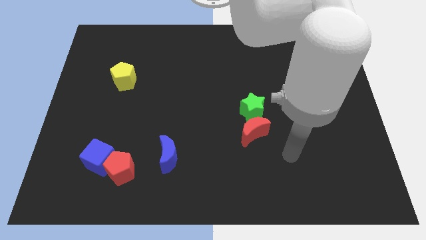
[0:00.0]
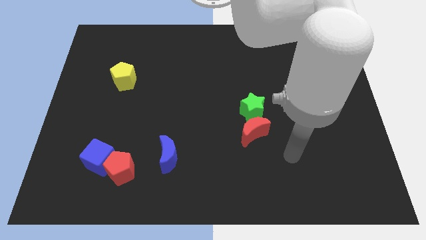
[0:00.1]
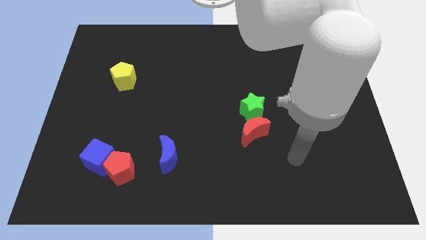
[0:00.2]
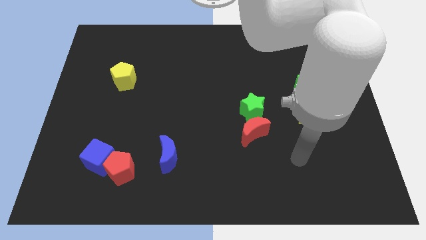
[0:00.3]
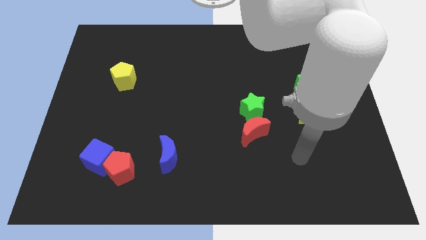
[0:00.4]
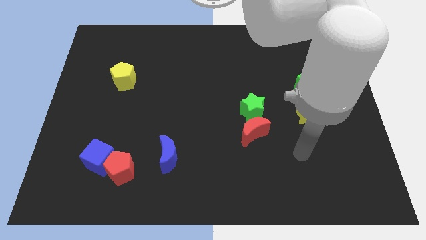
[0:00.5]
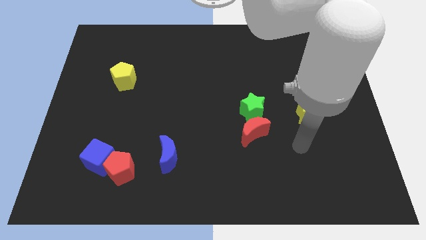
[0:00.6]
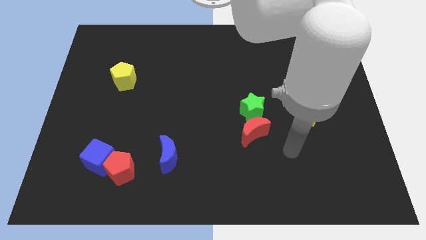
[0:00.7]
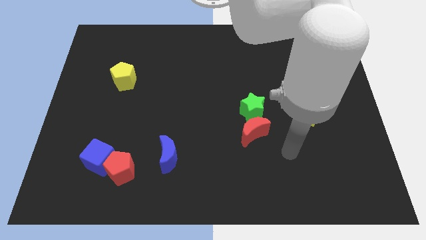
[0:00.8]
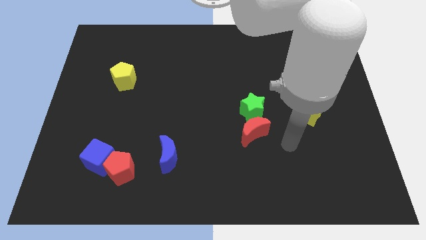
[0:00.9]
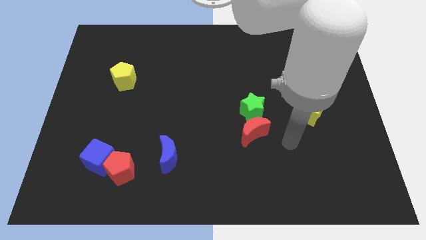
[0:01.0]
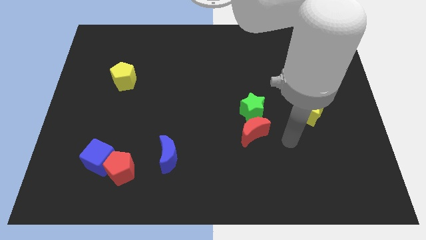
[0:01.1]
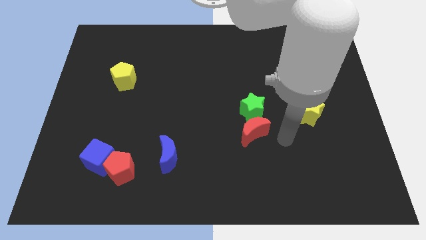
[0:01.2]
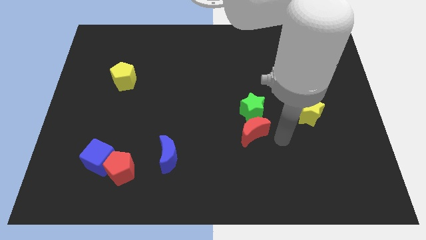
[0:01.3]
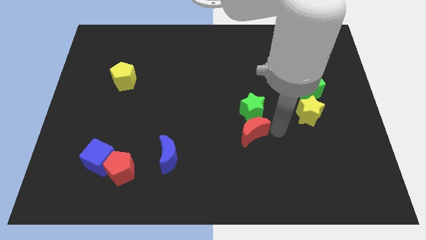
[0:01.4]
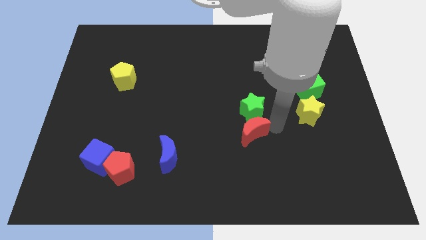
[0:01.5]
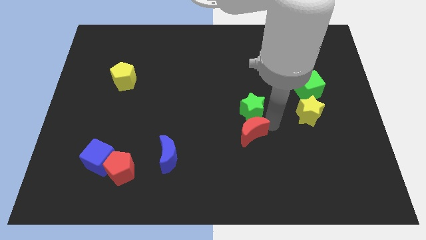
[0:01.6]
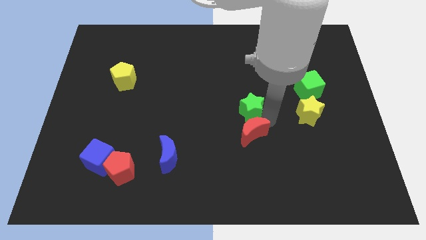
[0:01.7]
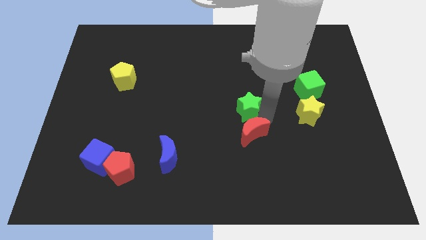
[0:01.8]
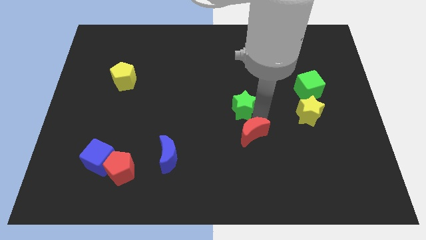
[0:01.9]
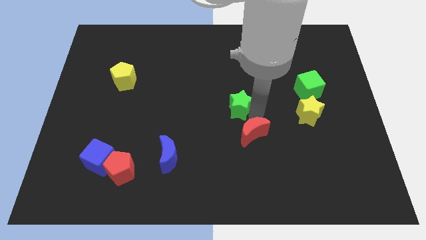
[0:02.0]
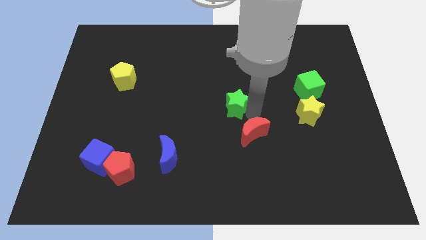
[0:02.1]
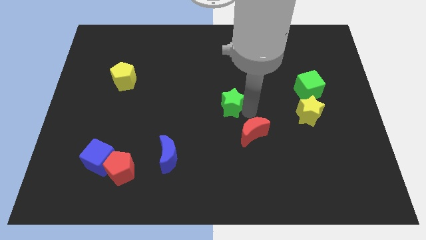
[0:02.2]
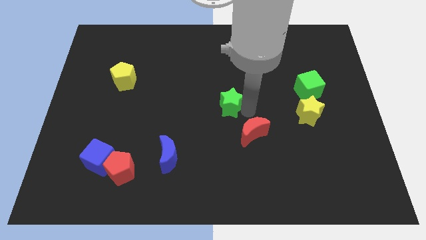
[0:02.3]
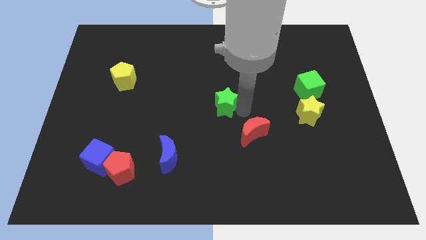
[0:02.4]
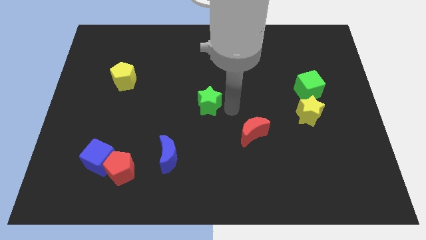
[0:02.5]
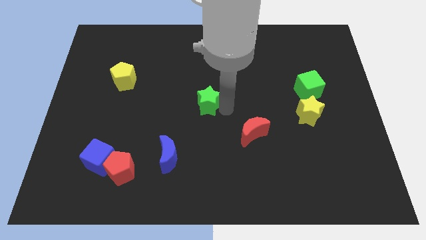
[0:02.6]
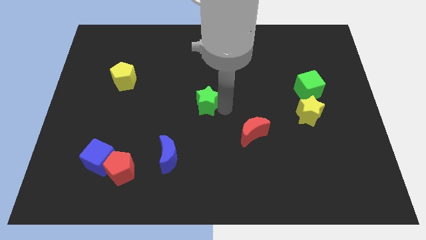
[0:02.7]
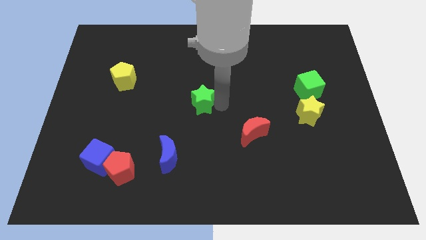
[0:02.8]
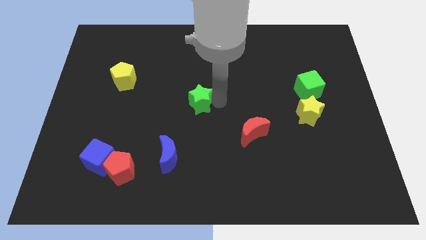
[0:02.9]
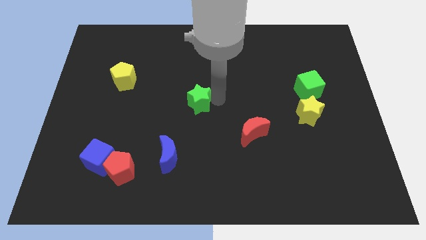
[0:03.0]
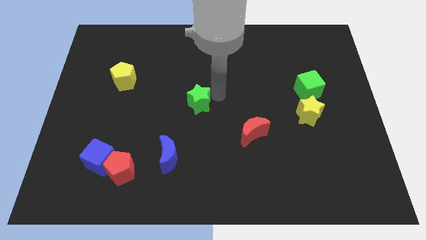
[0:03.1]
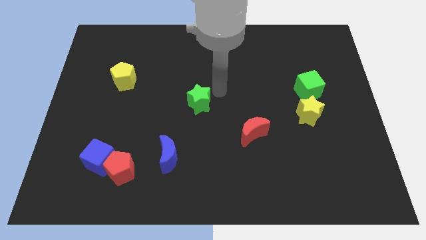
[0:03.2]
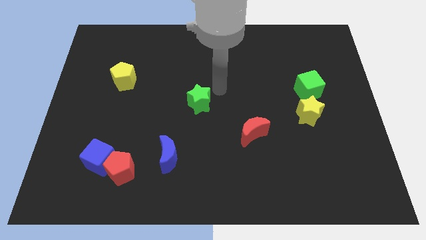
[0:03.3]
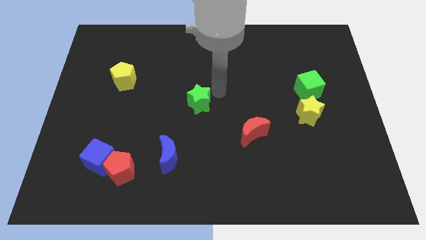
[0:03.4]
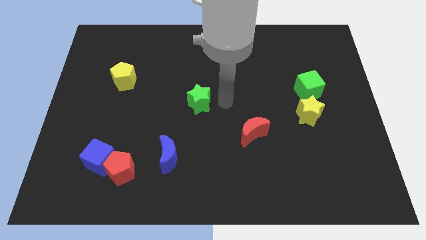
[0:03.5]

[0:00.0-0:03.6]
separate the green star from the red crescent

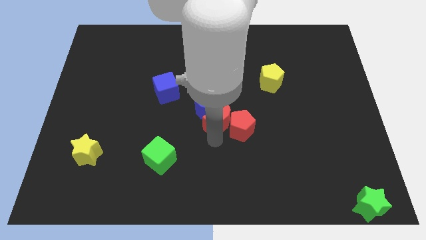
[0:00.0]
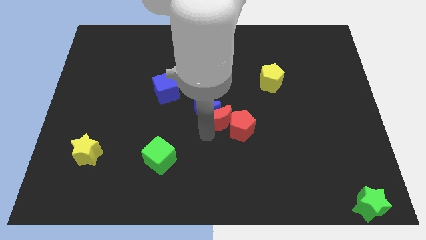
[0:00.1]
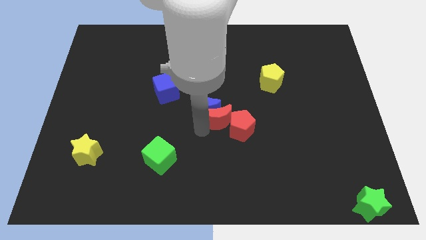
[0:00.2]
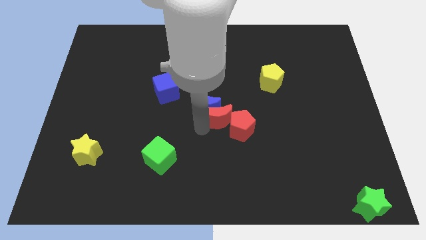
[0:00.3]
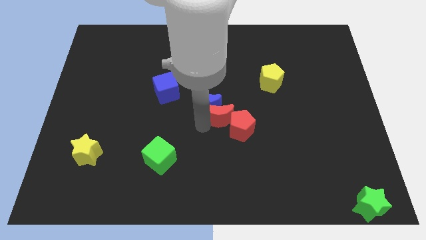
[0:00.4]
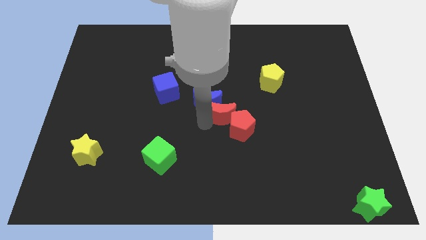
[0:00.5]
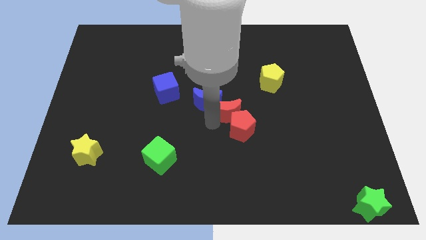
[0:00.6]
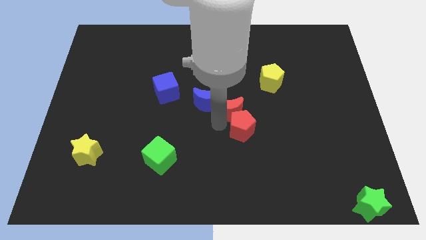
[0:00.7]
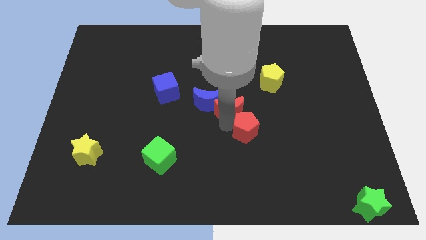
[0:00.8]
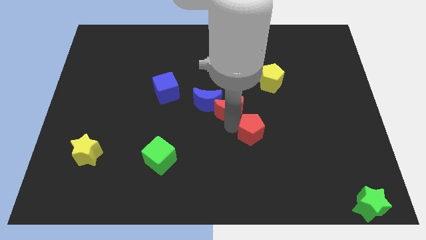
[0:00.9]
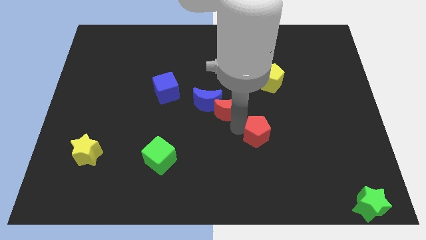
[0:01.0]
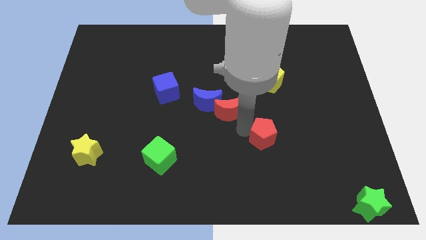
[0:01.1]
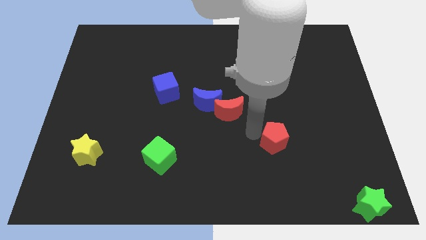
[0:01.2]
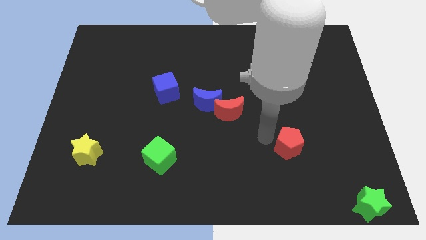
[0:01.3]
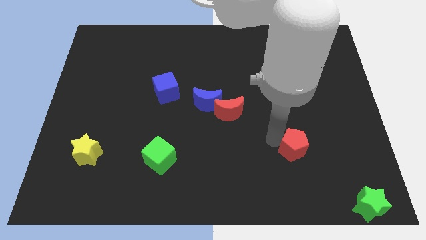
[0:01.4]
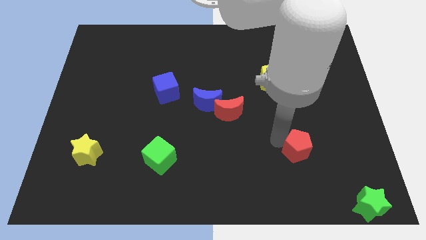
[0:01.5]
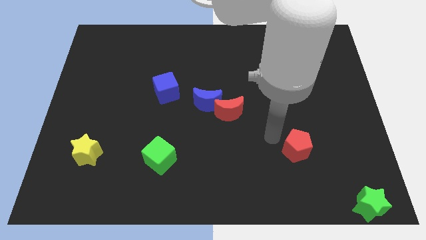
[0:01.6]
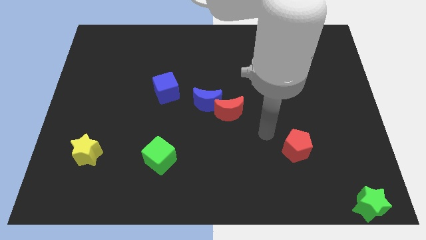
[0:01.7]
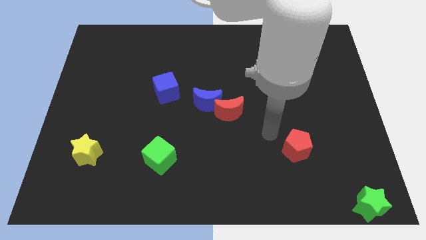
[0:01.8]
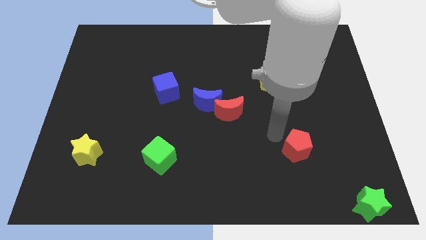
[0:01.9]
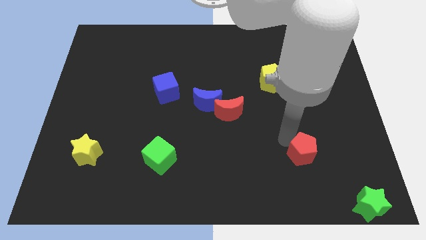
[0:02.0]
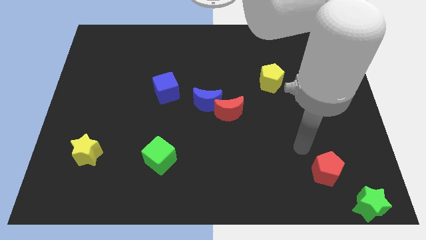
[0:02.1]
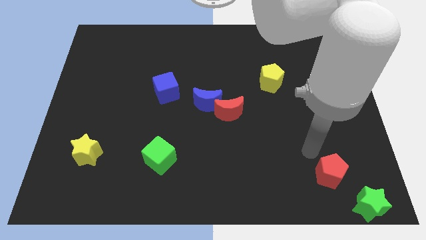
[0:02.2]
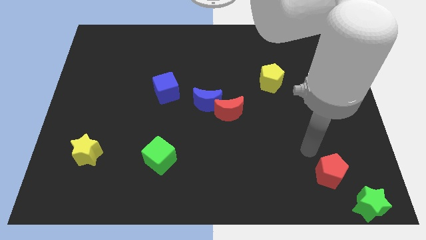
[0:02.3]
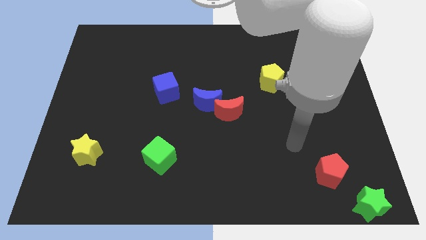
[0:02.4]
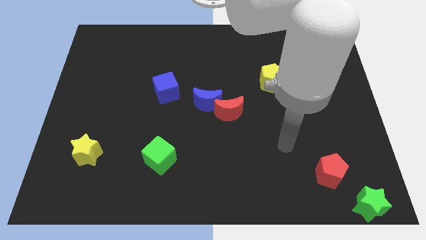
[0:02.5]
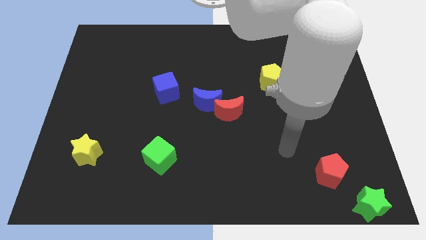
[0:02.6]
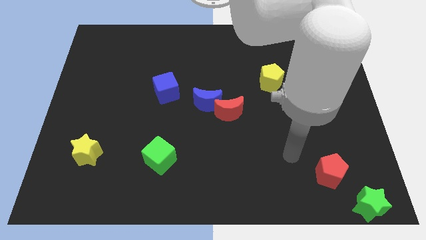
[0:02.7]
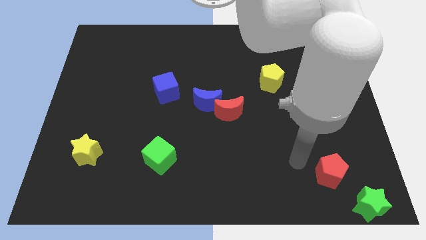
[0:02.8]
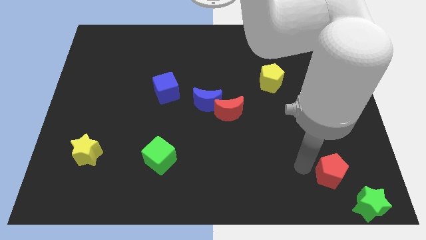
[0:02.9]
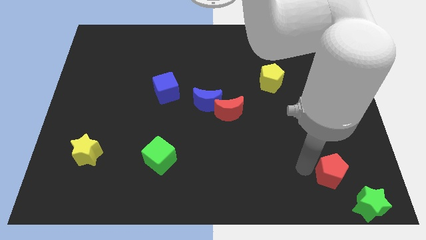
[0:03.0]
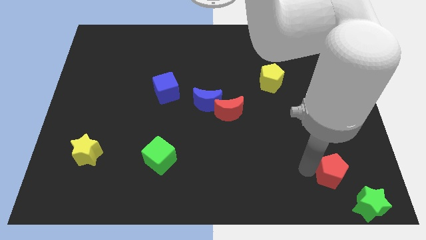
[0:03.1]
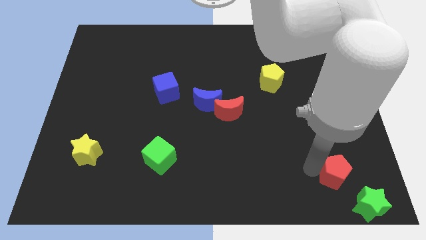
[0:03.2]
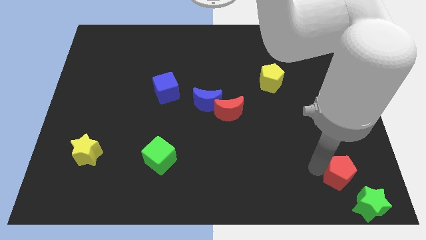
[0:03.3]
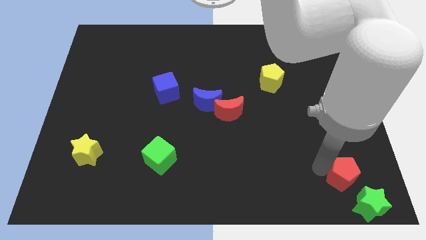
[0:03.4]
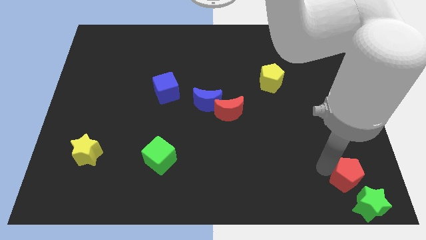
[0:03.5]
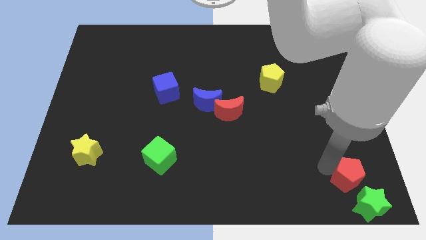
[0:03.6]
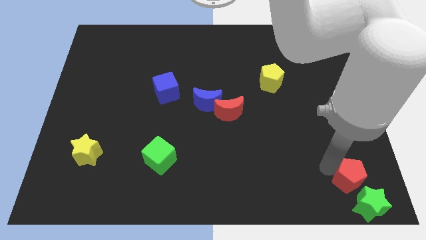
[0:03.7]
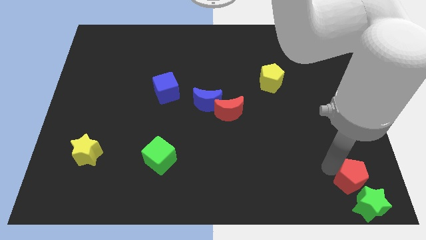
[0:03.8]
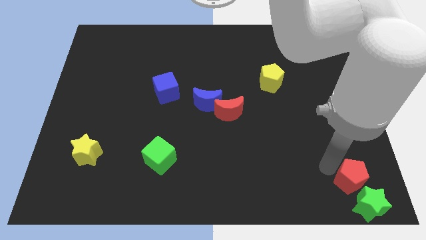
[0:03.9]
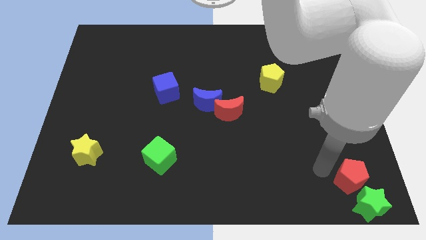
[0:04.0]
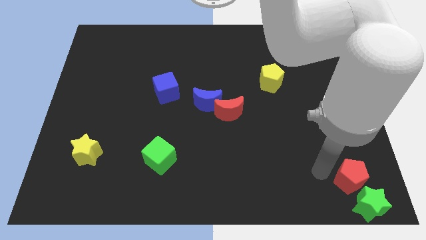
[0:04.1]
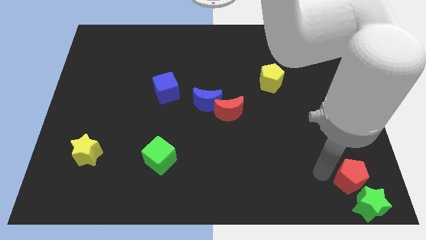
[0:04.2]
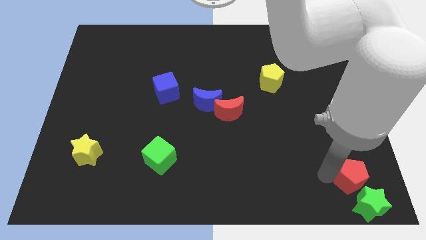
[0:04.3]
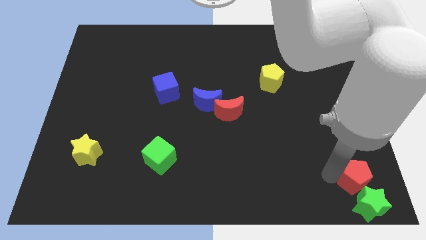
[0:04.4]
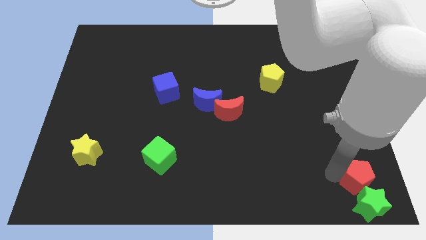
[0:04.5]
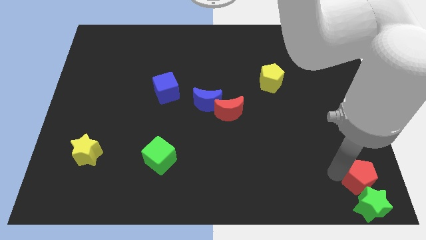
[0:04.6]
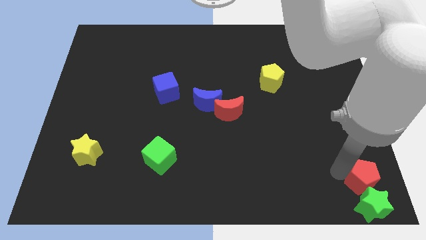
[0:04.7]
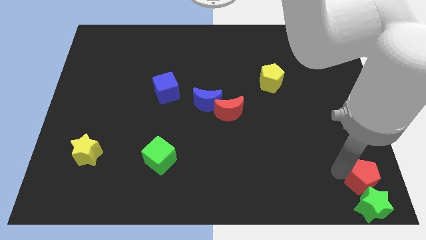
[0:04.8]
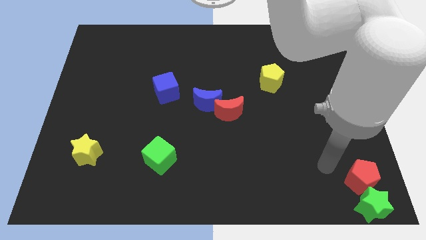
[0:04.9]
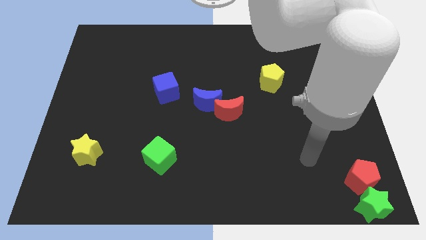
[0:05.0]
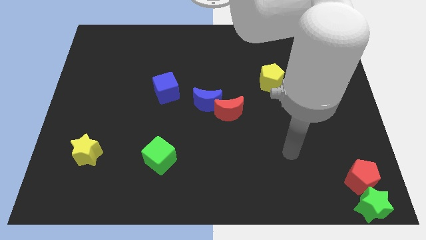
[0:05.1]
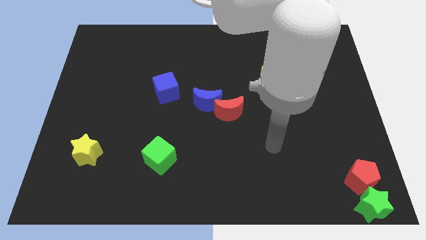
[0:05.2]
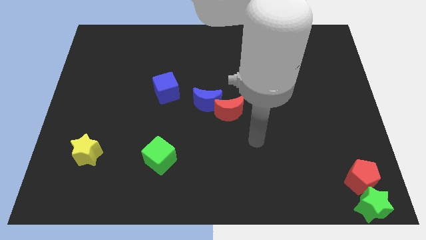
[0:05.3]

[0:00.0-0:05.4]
place the red pentagon above the green star
